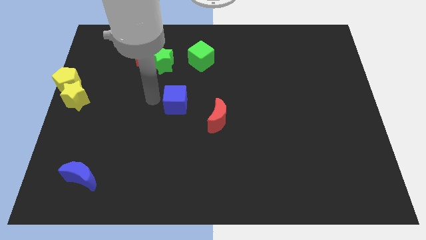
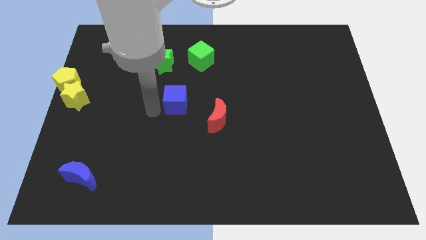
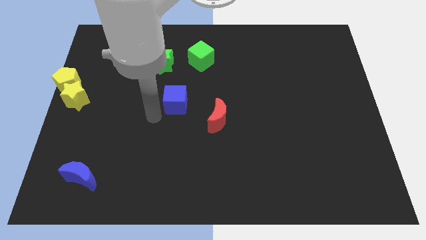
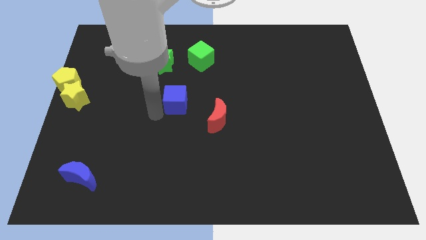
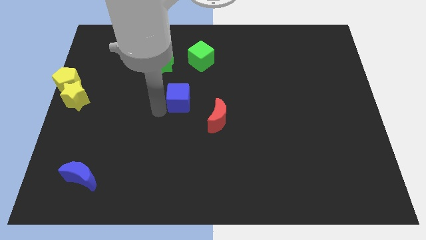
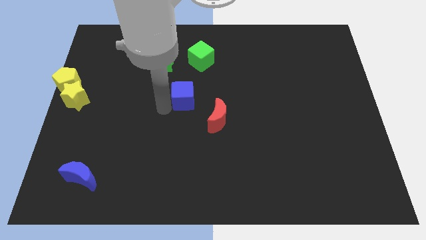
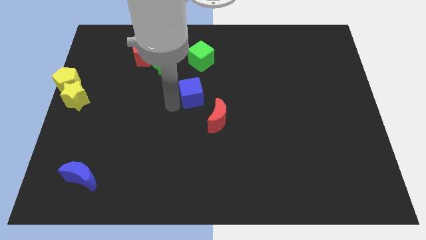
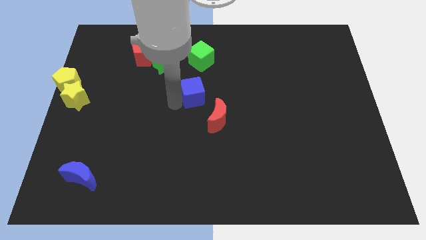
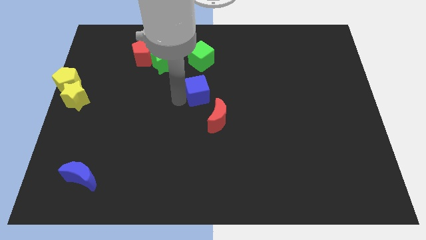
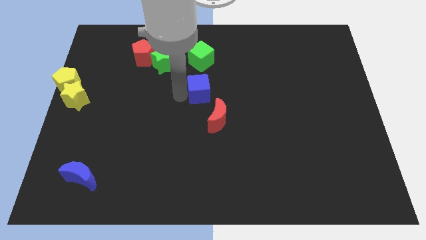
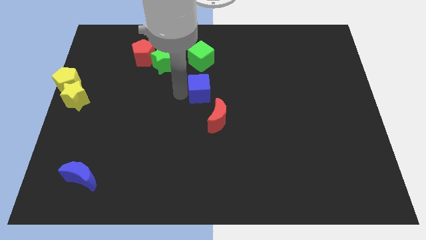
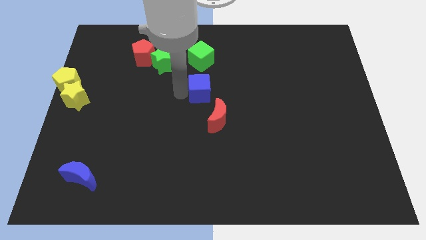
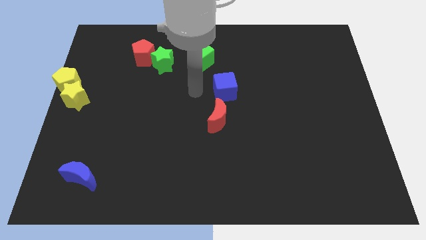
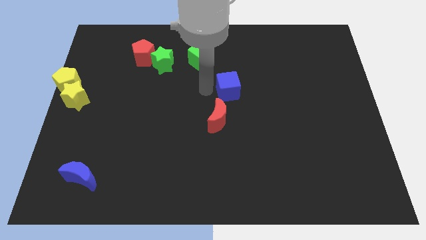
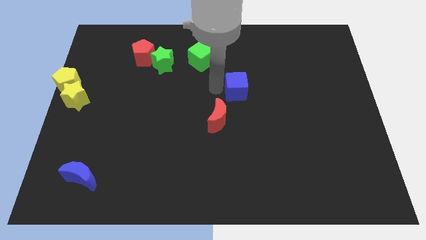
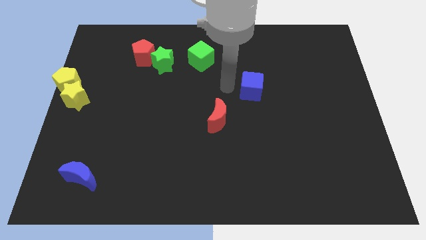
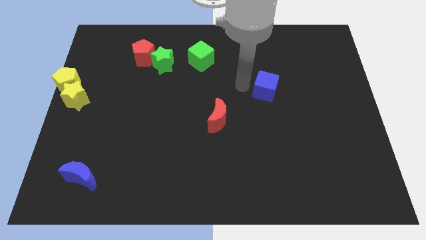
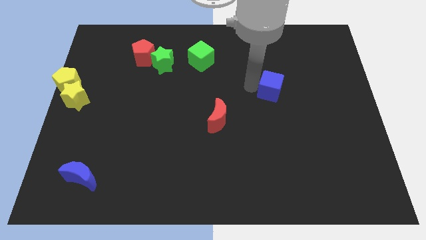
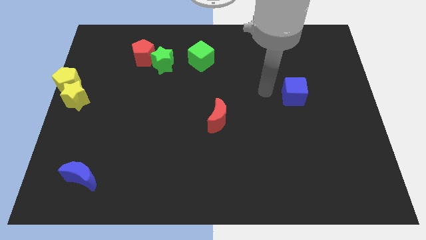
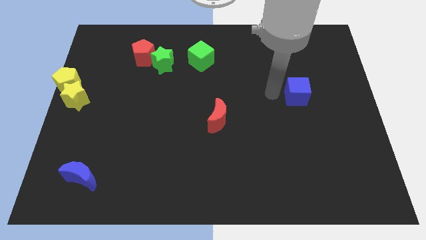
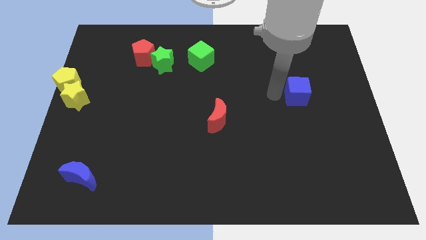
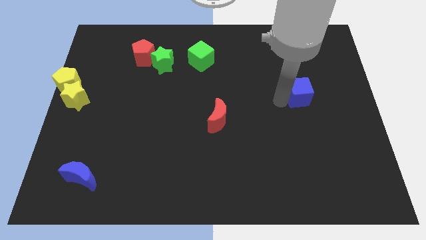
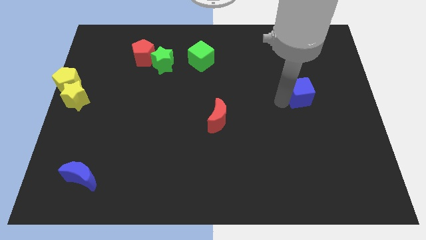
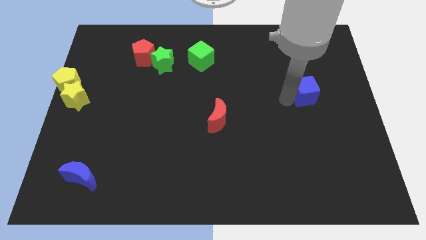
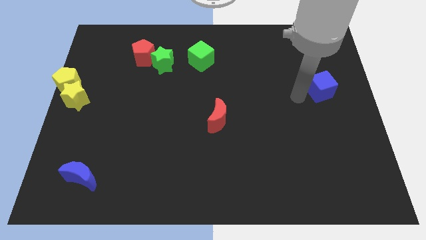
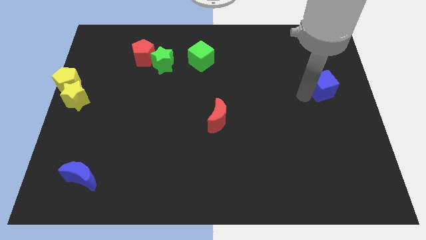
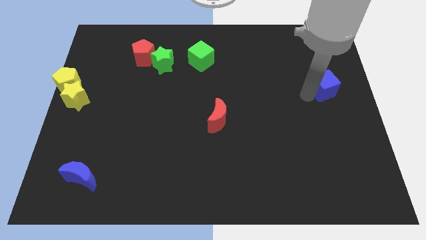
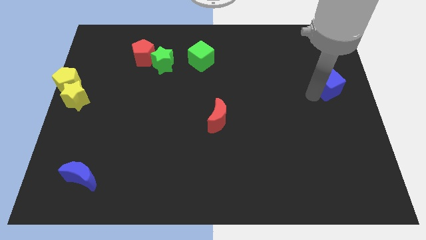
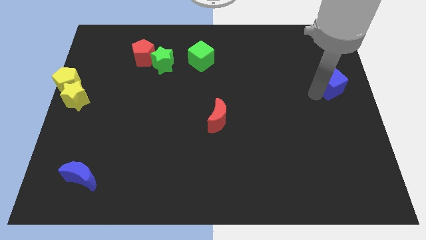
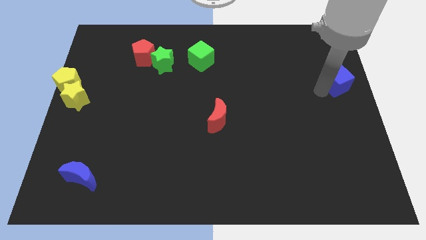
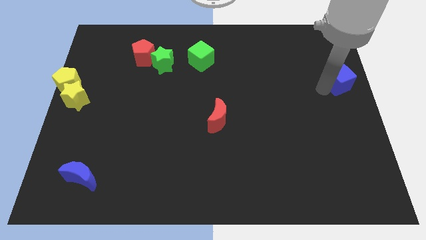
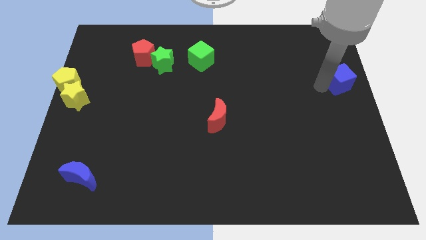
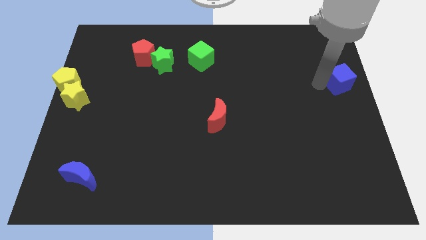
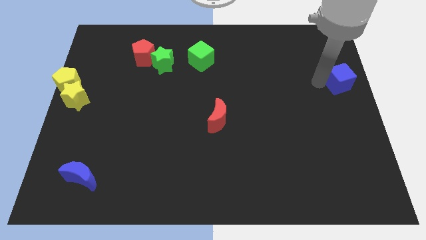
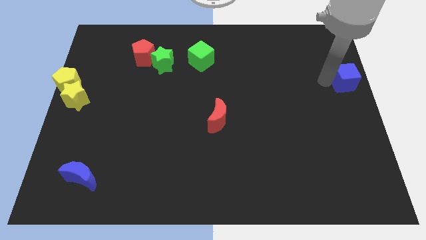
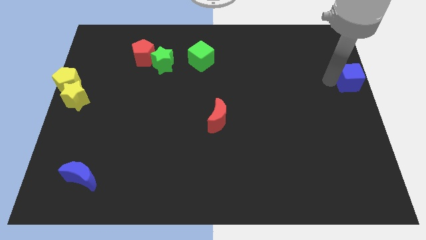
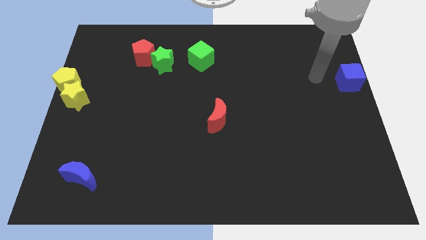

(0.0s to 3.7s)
bring the blue cube to the right center of the board

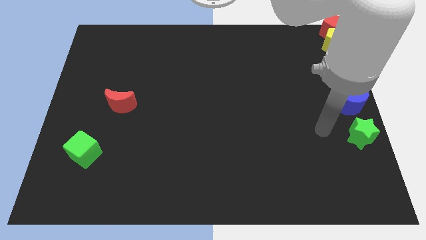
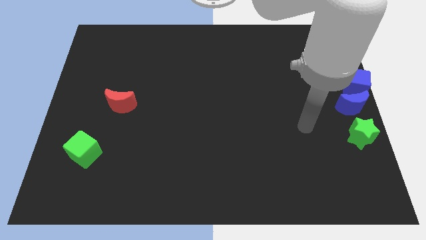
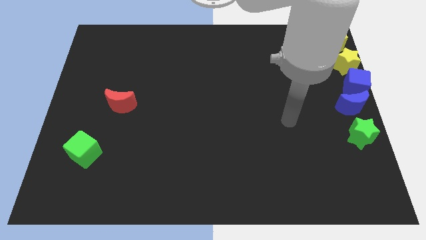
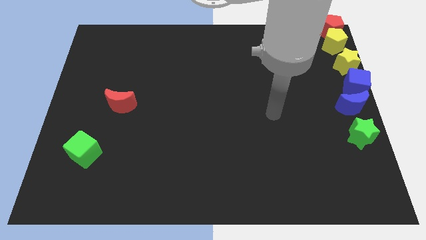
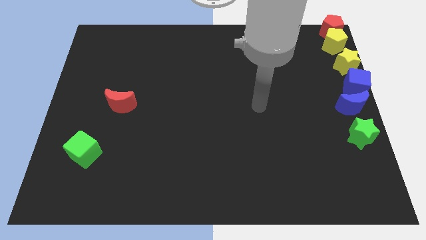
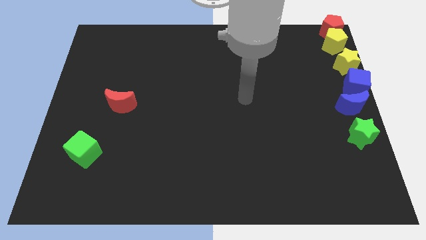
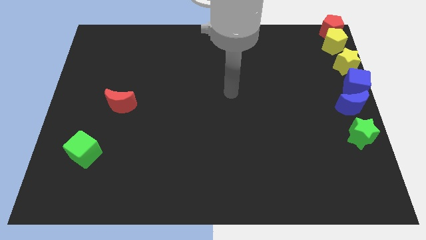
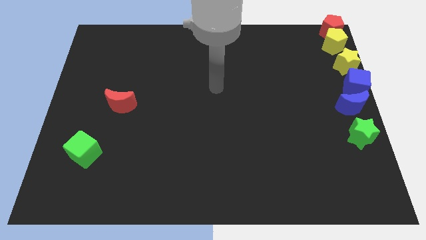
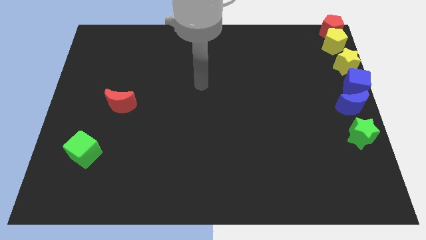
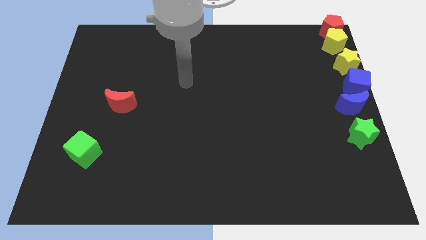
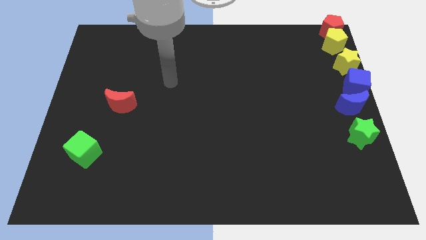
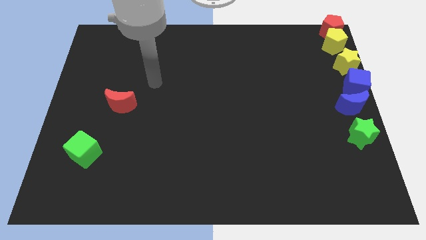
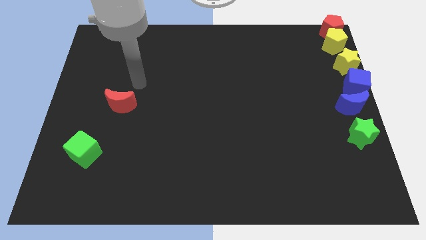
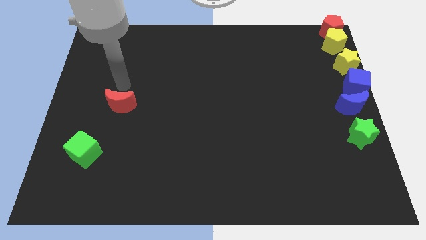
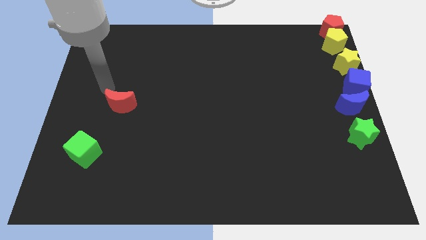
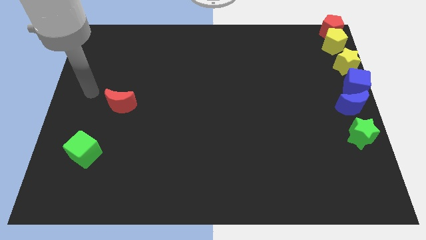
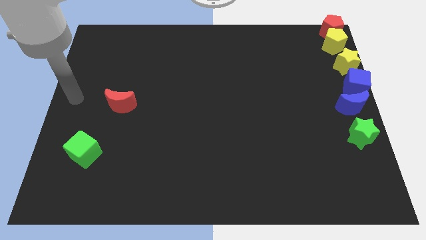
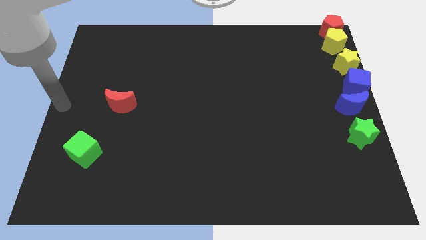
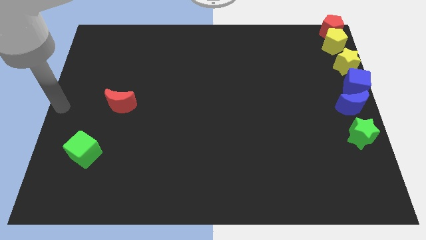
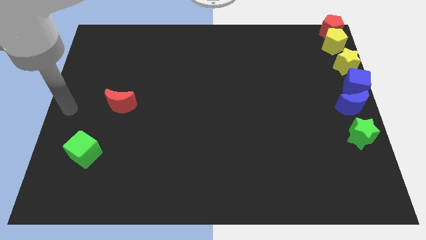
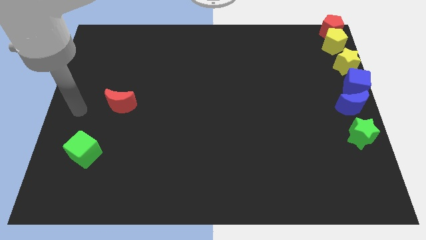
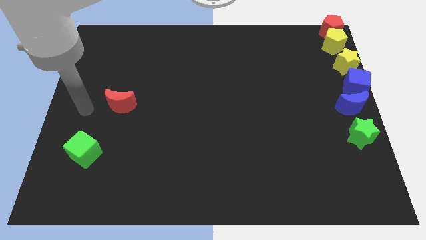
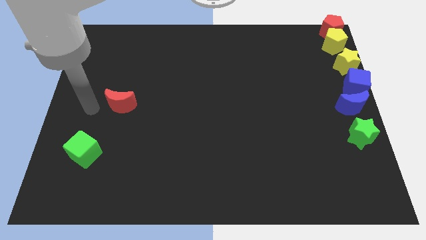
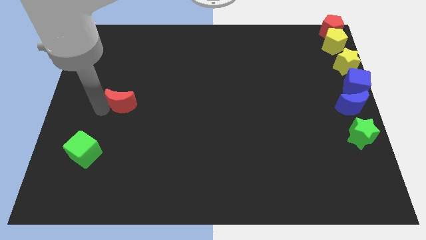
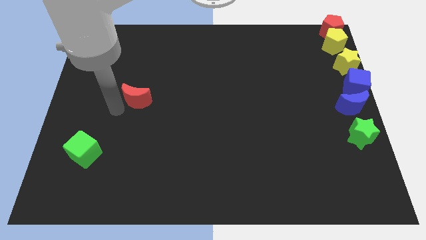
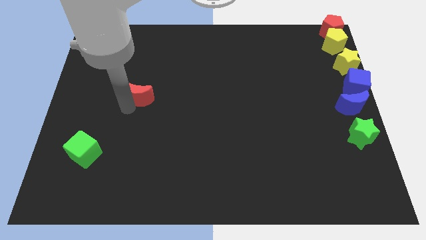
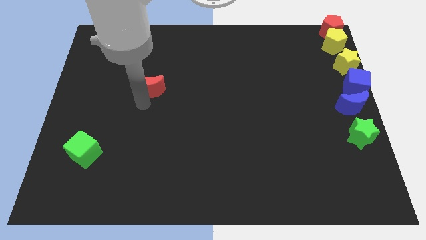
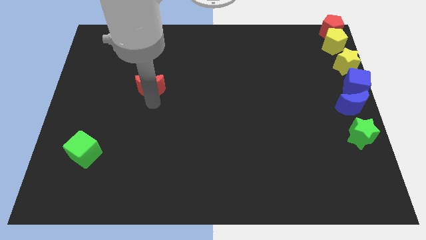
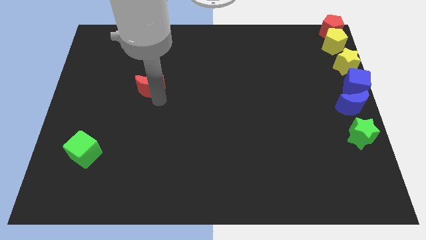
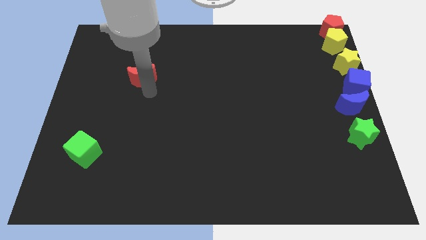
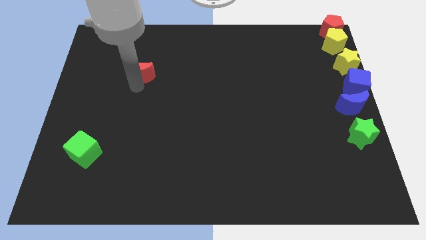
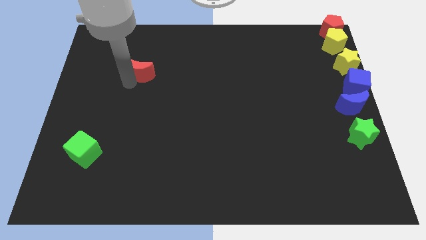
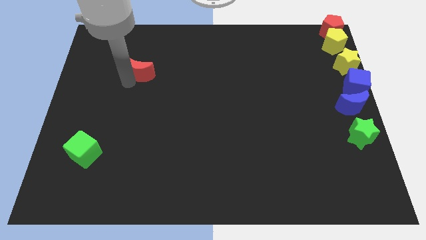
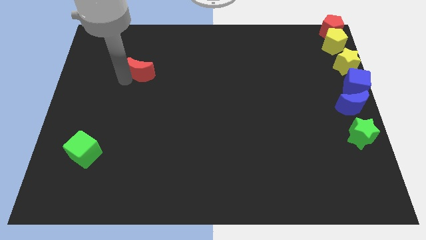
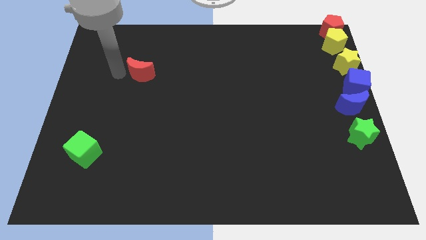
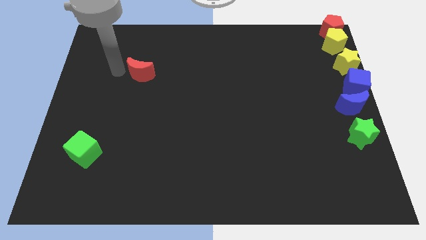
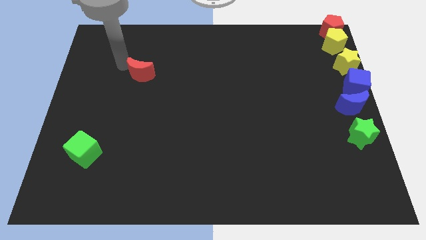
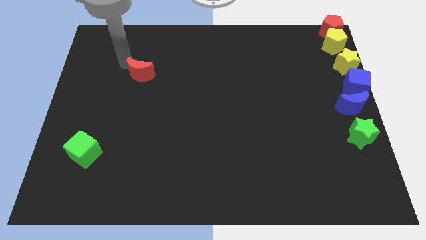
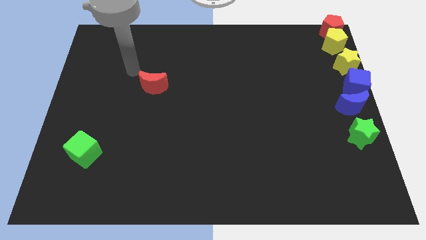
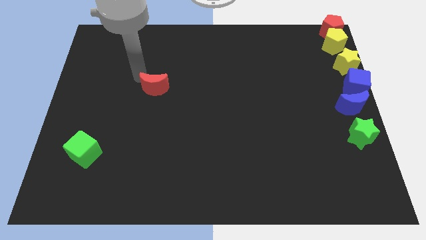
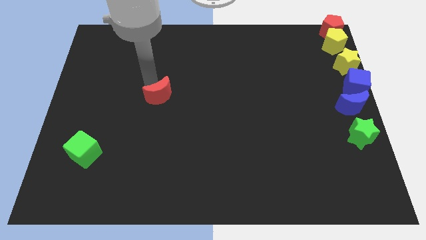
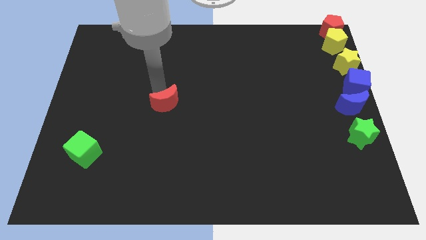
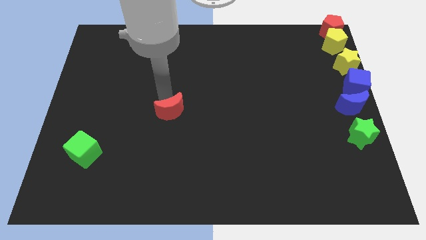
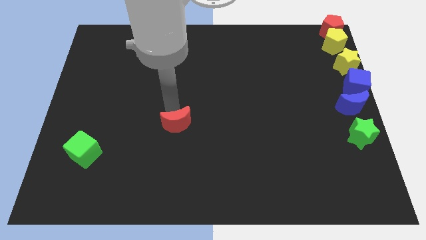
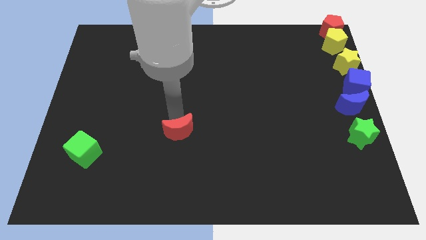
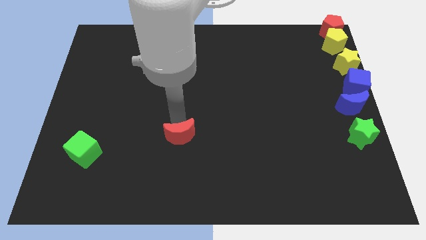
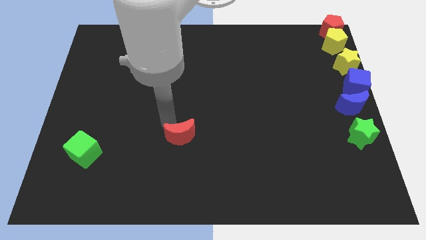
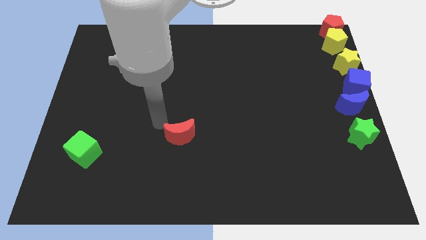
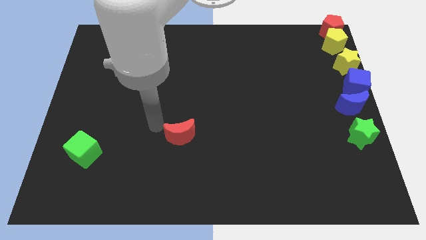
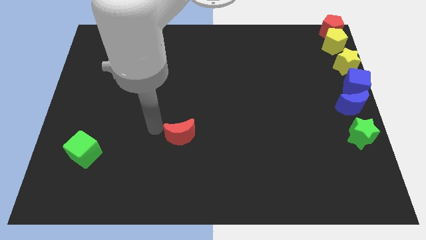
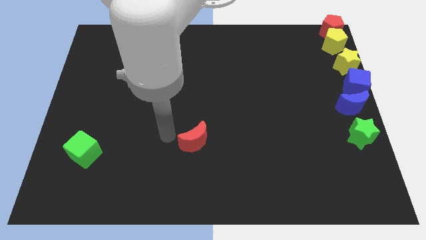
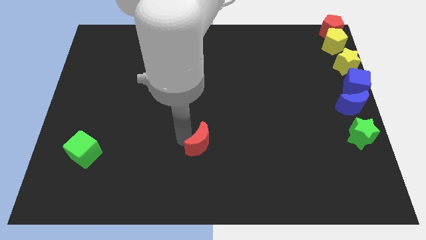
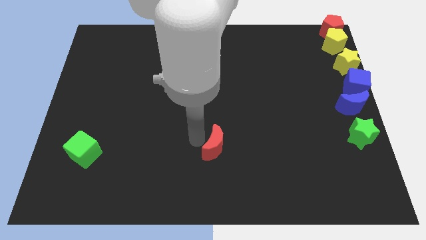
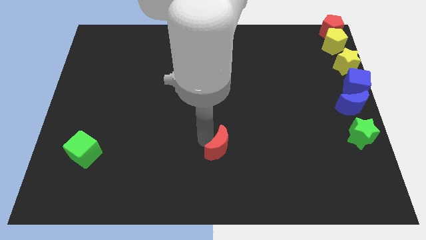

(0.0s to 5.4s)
place the red crescent in between green blocks
